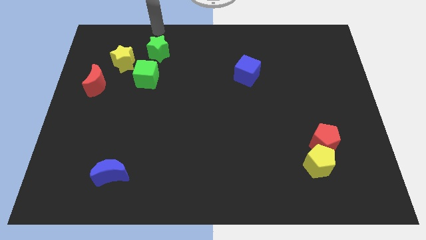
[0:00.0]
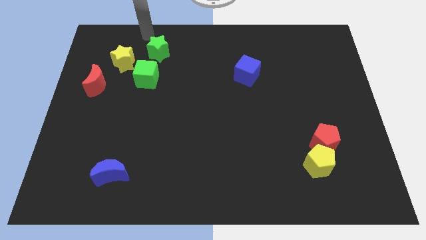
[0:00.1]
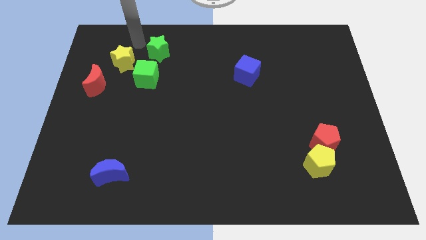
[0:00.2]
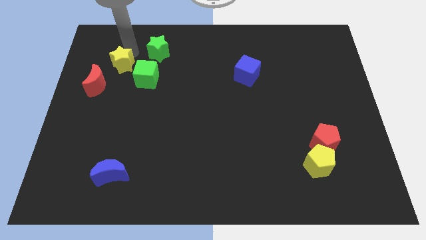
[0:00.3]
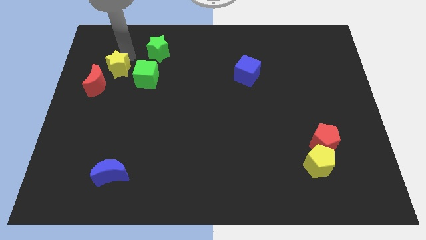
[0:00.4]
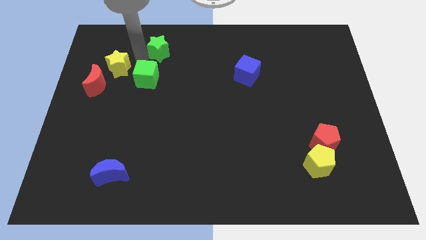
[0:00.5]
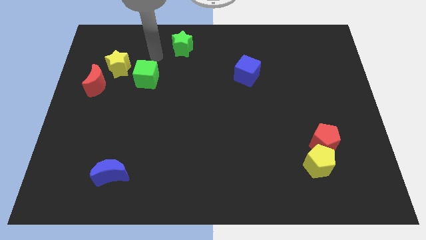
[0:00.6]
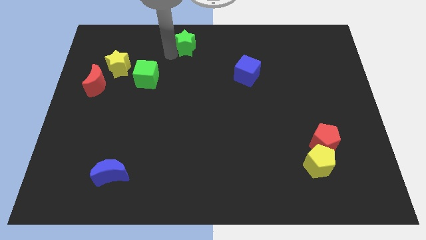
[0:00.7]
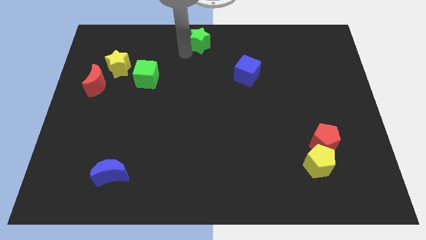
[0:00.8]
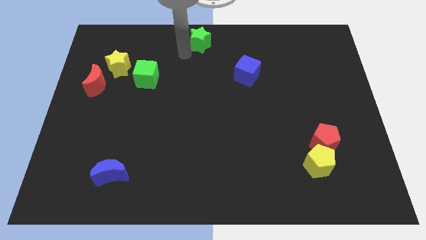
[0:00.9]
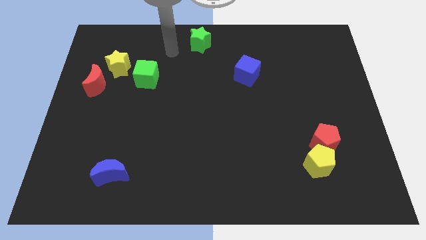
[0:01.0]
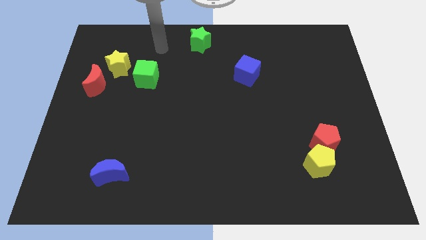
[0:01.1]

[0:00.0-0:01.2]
move green star to the top center of the board

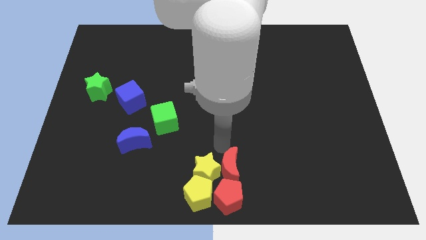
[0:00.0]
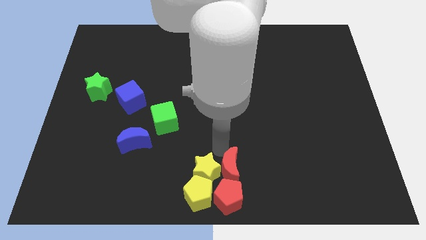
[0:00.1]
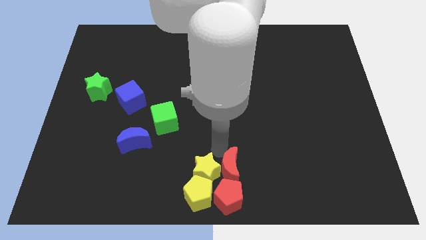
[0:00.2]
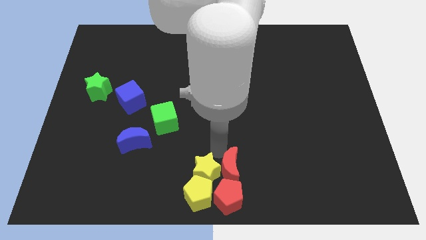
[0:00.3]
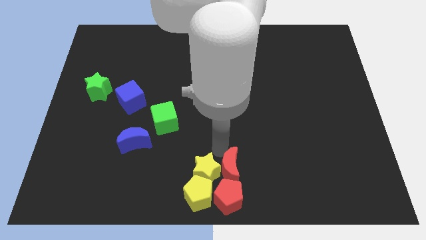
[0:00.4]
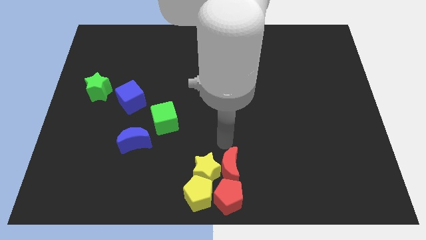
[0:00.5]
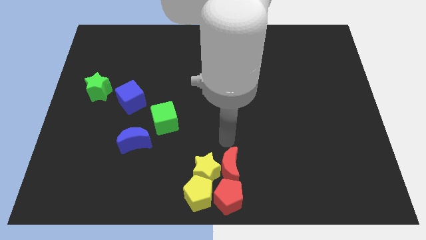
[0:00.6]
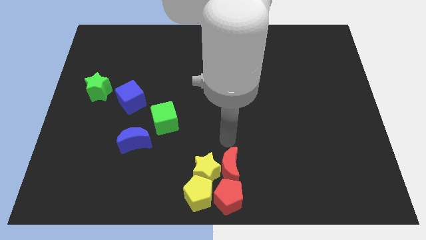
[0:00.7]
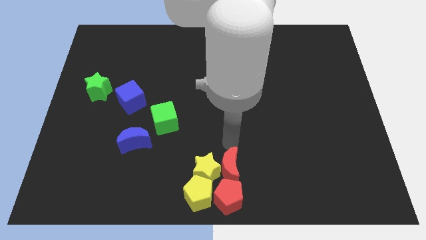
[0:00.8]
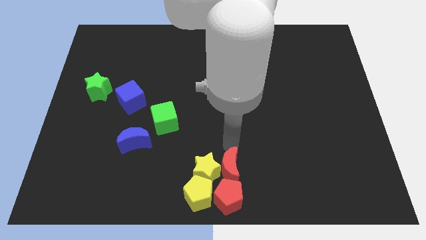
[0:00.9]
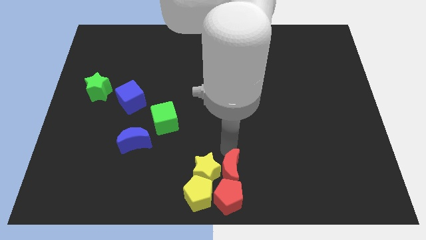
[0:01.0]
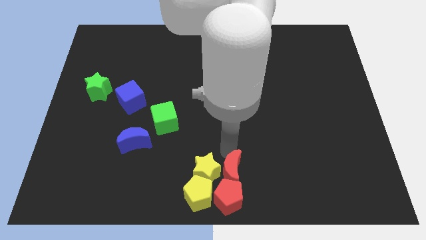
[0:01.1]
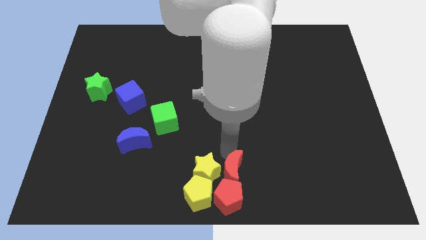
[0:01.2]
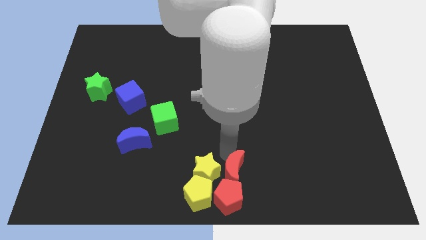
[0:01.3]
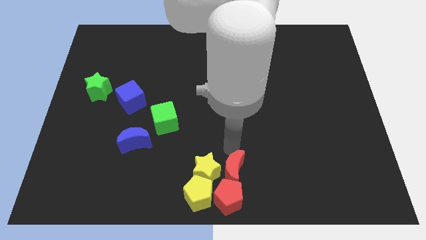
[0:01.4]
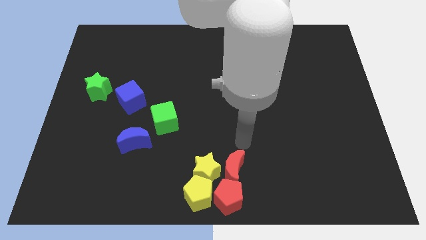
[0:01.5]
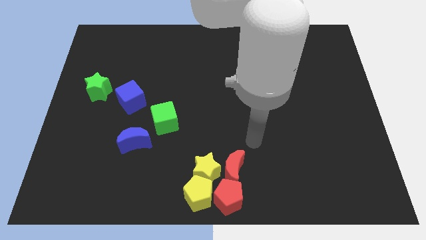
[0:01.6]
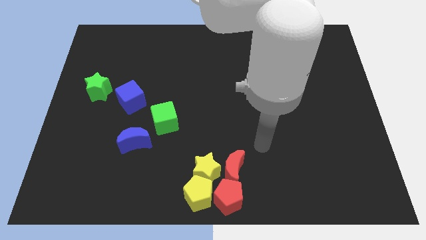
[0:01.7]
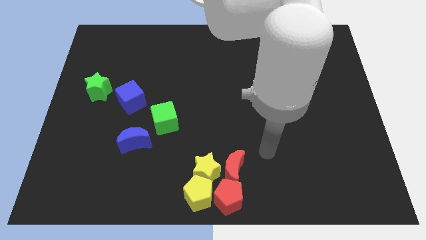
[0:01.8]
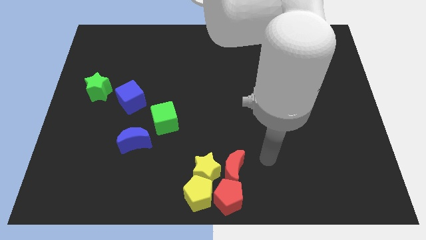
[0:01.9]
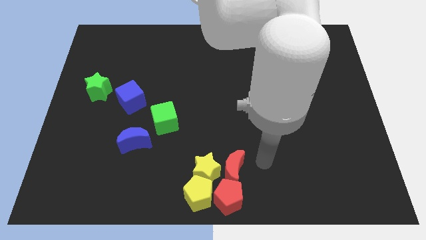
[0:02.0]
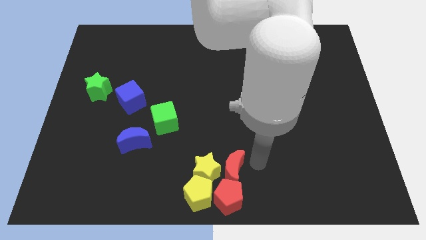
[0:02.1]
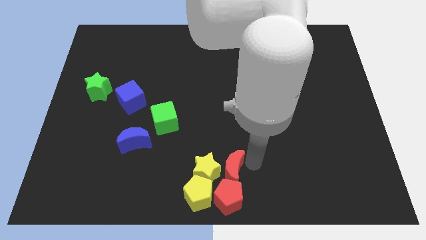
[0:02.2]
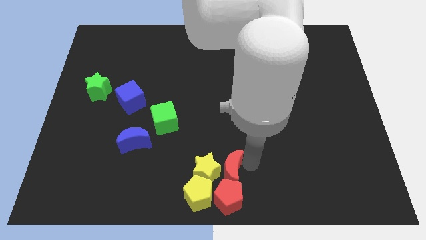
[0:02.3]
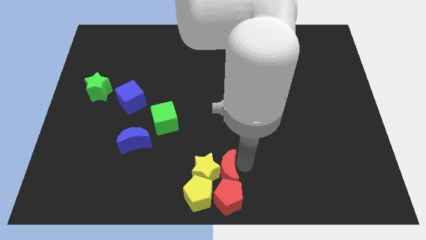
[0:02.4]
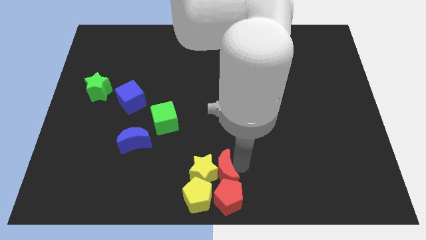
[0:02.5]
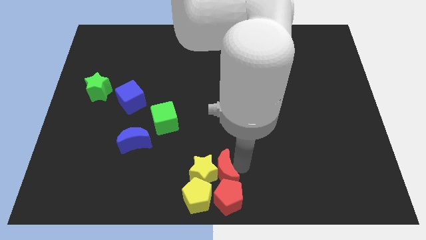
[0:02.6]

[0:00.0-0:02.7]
point your arm above red moon

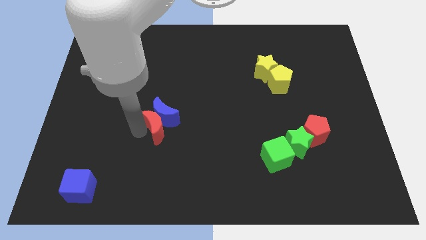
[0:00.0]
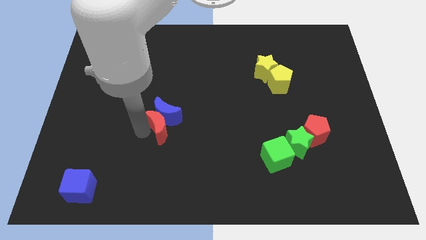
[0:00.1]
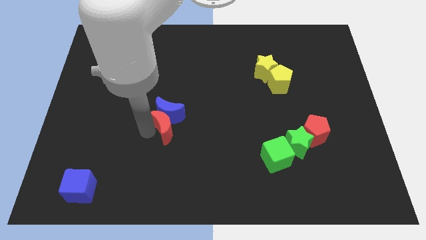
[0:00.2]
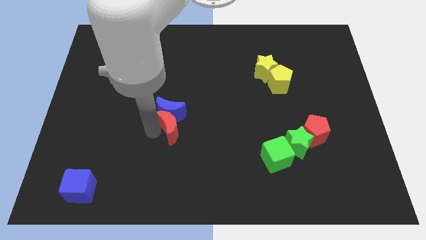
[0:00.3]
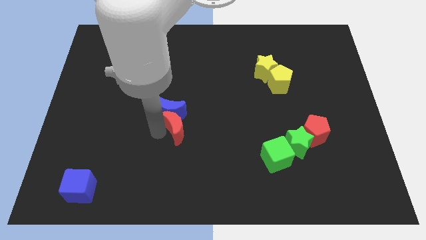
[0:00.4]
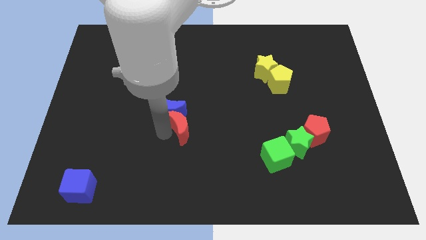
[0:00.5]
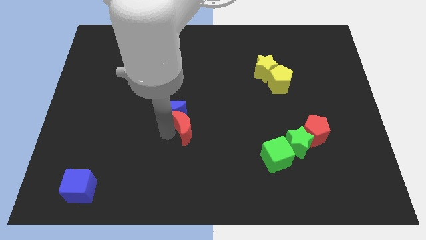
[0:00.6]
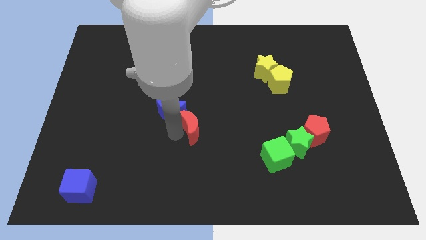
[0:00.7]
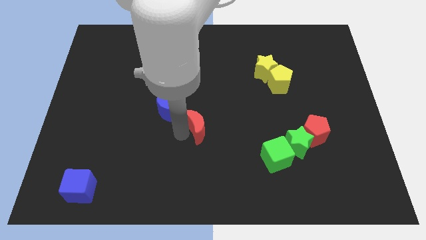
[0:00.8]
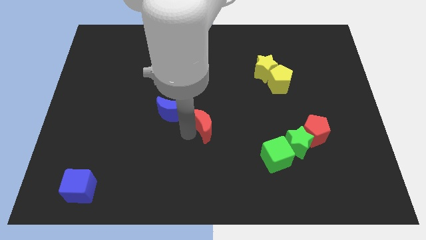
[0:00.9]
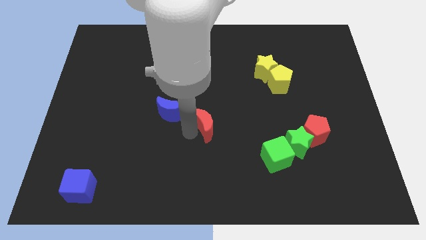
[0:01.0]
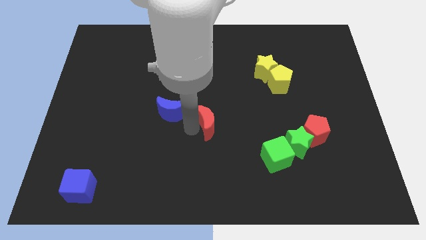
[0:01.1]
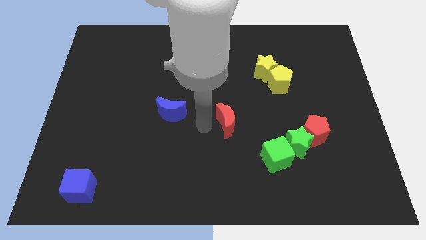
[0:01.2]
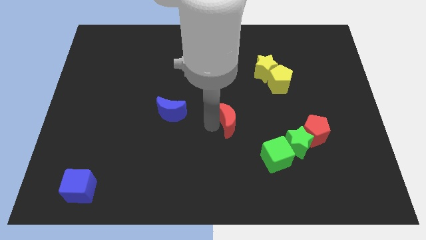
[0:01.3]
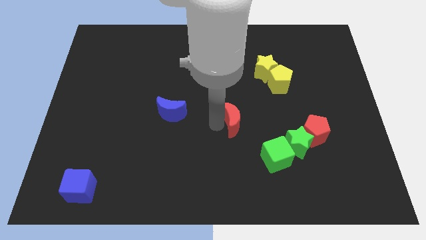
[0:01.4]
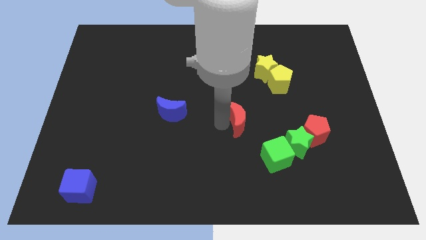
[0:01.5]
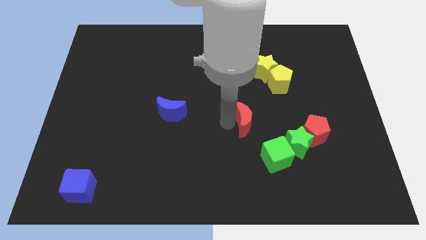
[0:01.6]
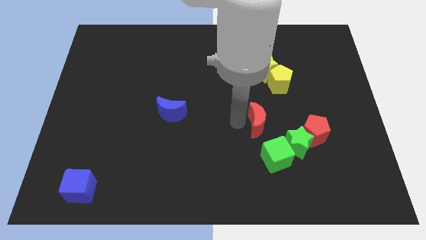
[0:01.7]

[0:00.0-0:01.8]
separate the red moon from blue moon

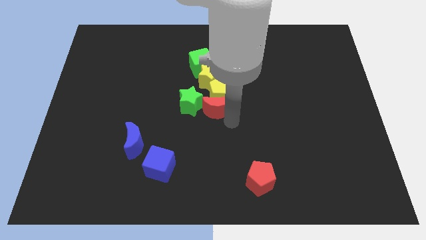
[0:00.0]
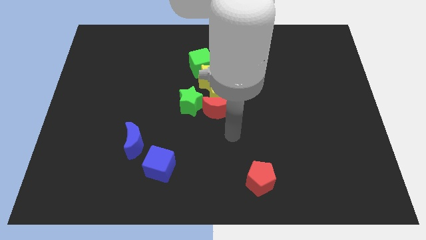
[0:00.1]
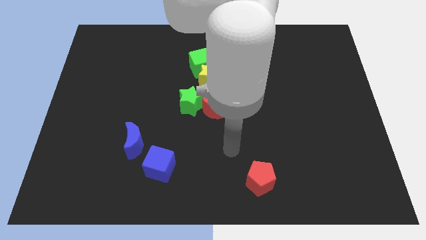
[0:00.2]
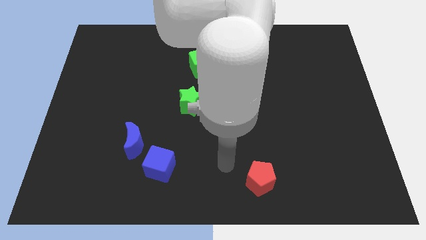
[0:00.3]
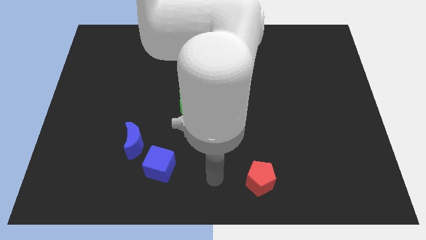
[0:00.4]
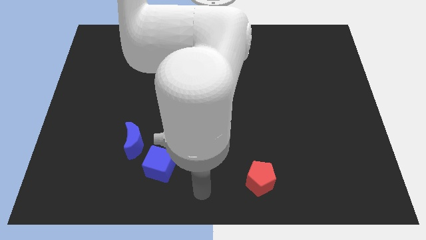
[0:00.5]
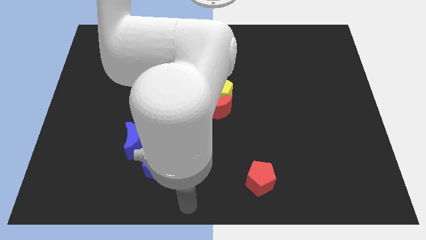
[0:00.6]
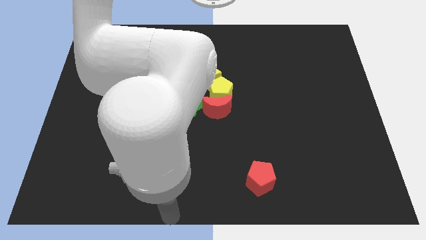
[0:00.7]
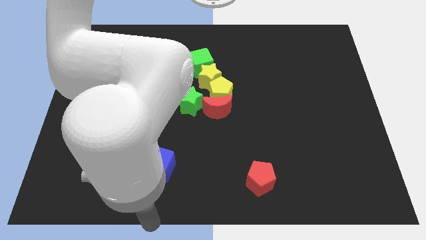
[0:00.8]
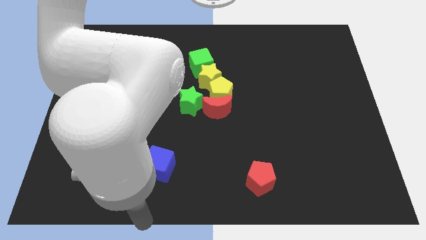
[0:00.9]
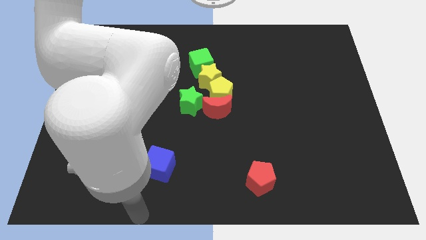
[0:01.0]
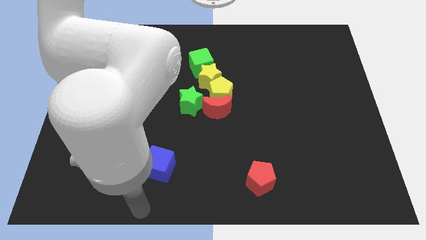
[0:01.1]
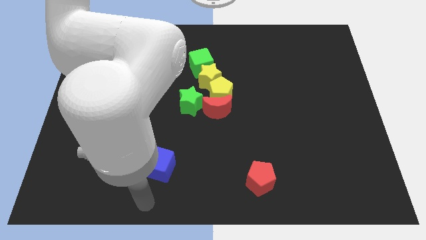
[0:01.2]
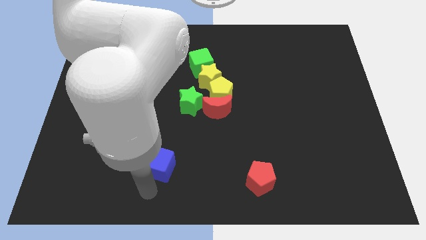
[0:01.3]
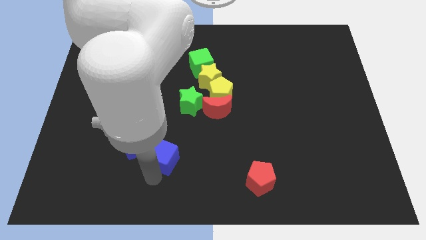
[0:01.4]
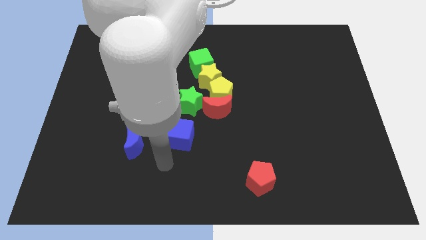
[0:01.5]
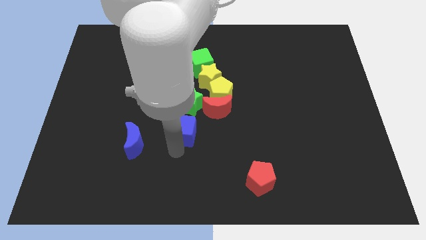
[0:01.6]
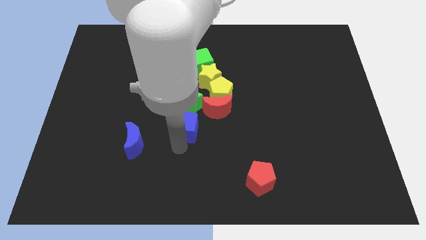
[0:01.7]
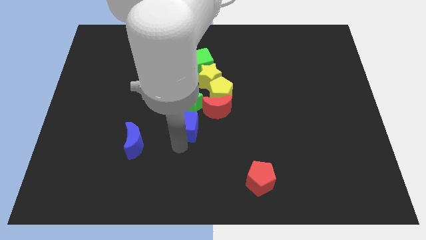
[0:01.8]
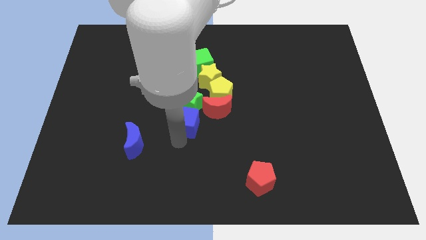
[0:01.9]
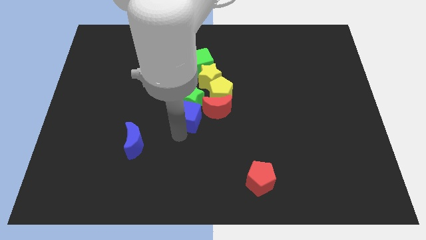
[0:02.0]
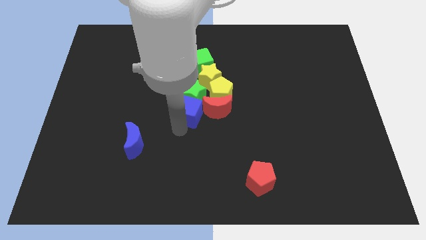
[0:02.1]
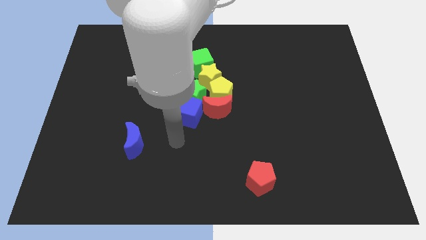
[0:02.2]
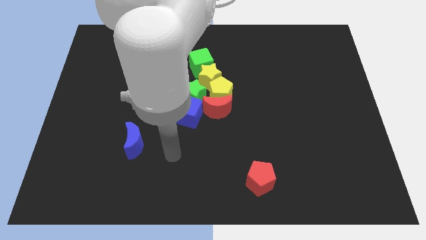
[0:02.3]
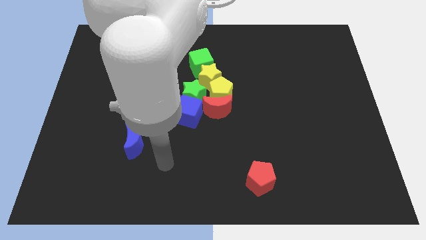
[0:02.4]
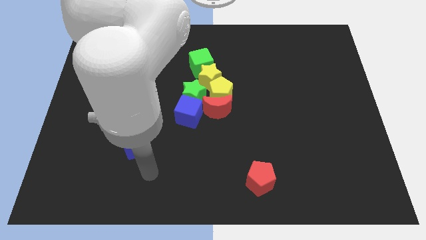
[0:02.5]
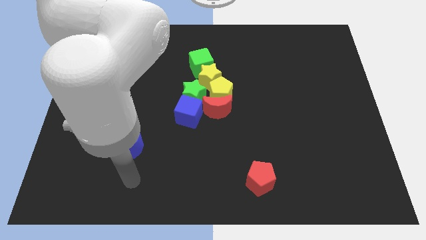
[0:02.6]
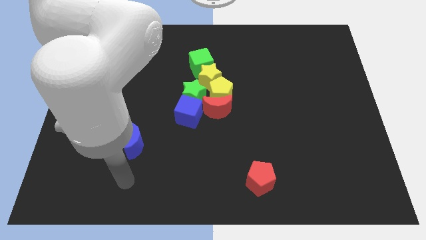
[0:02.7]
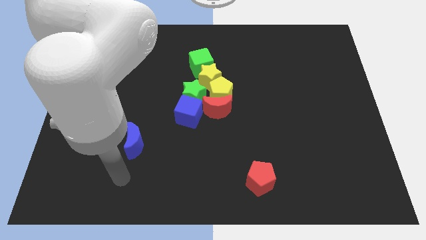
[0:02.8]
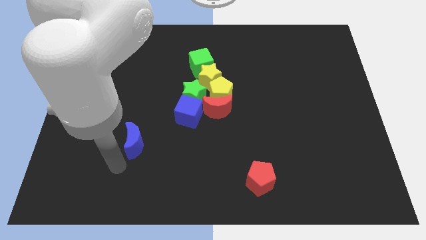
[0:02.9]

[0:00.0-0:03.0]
push blue cube into the bottom side of the green star

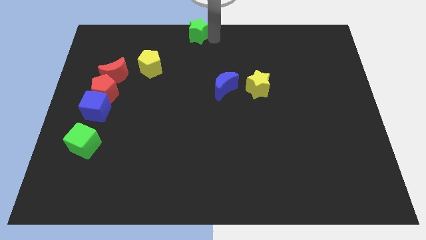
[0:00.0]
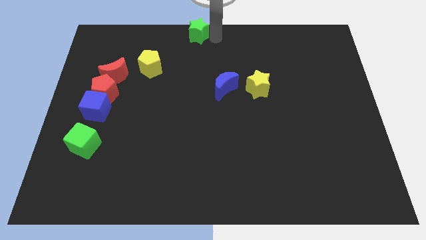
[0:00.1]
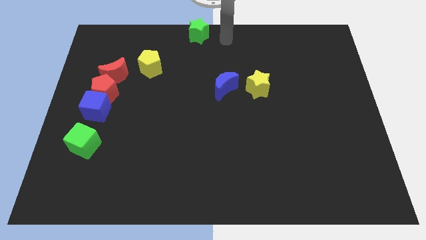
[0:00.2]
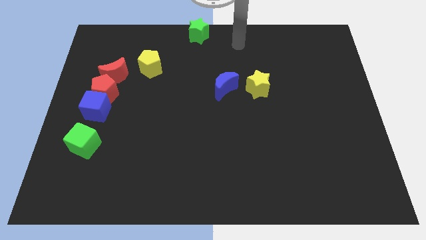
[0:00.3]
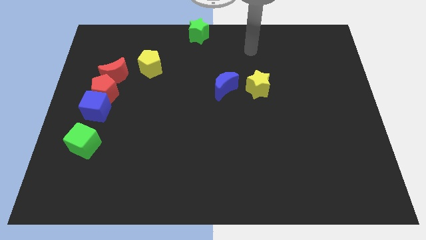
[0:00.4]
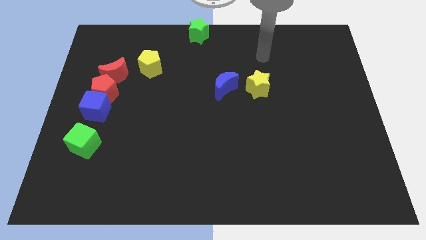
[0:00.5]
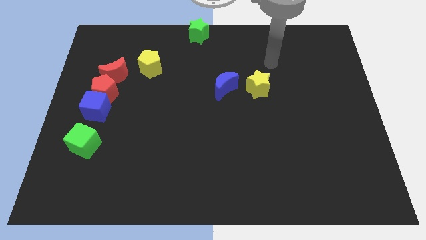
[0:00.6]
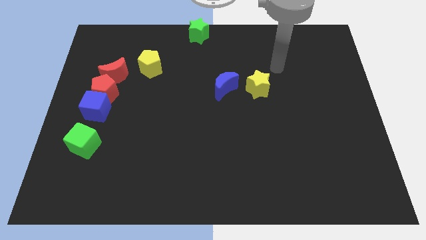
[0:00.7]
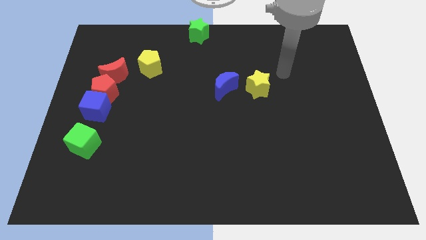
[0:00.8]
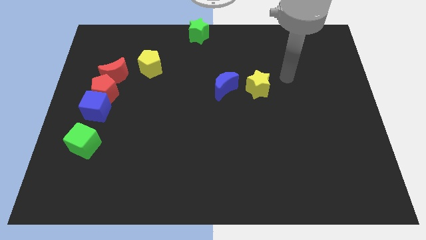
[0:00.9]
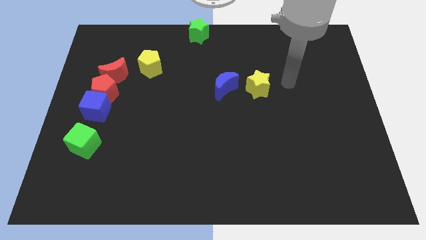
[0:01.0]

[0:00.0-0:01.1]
move your arm down and to the right
